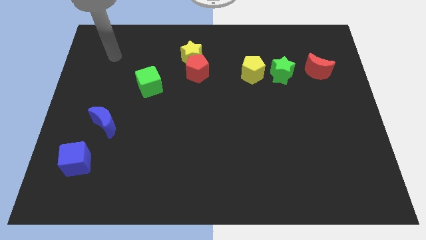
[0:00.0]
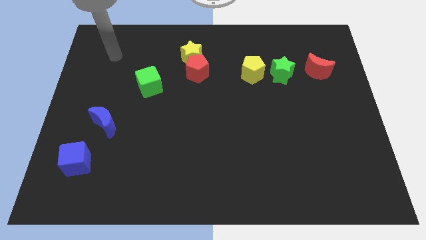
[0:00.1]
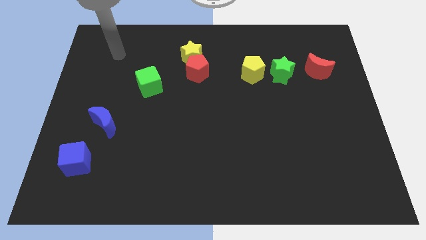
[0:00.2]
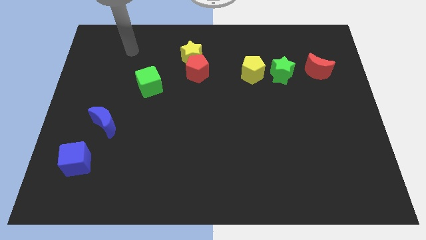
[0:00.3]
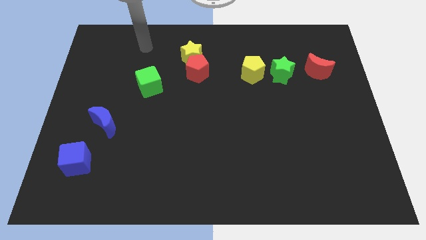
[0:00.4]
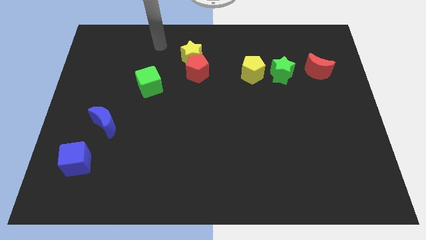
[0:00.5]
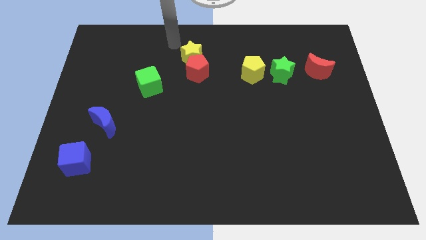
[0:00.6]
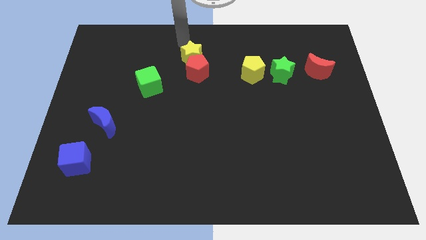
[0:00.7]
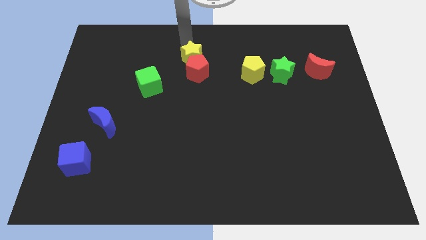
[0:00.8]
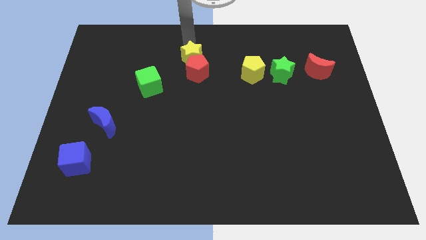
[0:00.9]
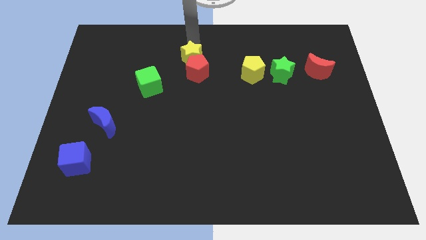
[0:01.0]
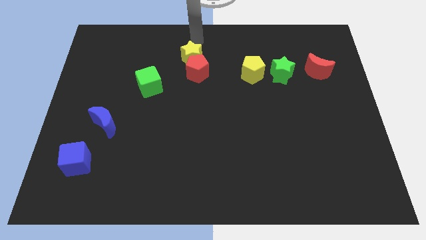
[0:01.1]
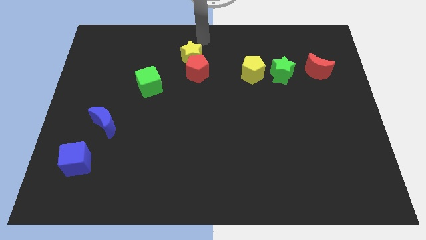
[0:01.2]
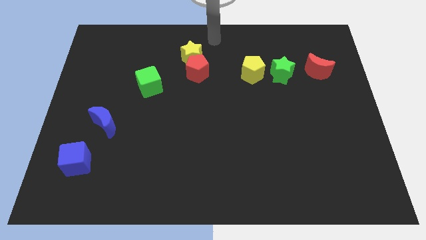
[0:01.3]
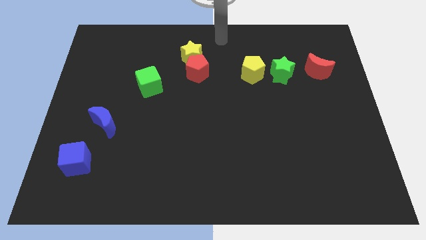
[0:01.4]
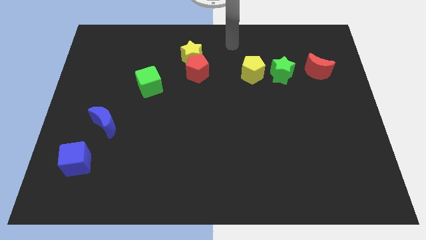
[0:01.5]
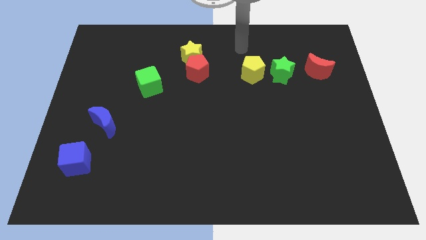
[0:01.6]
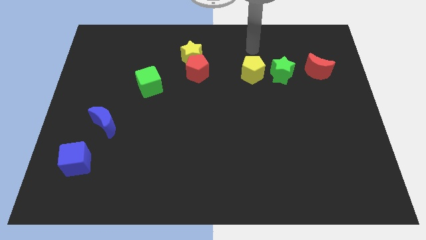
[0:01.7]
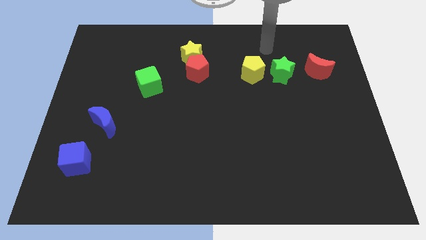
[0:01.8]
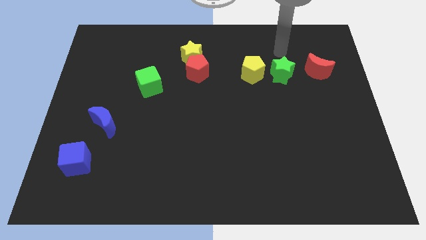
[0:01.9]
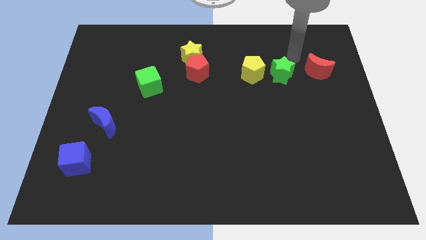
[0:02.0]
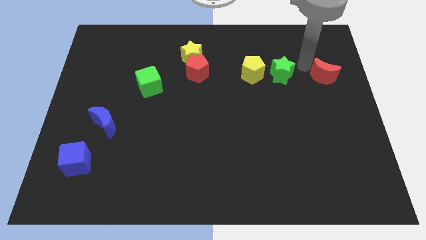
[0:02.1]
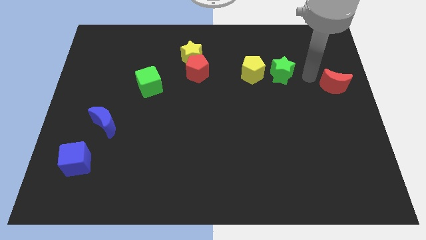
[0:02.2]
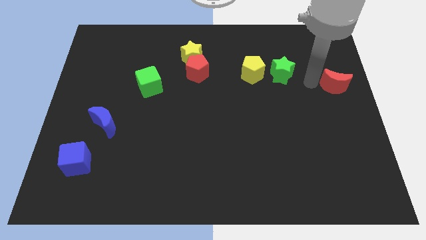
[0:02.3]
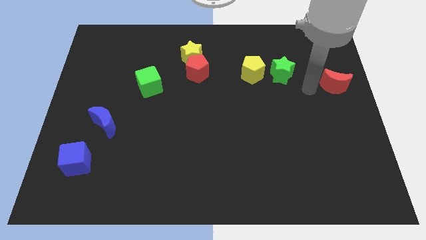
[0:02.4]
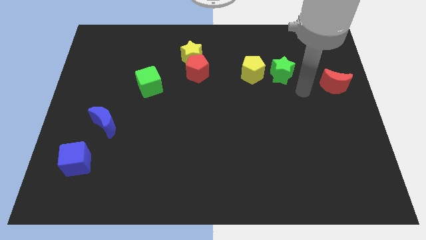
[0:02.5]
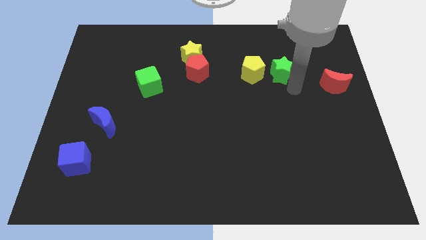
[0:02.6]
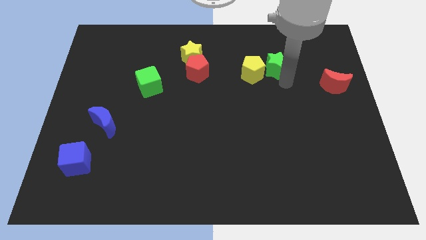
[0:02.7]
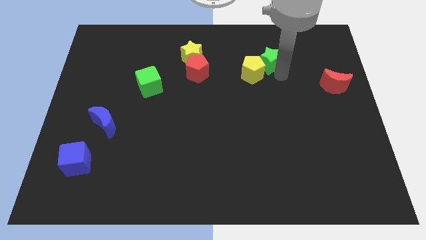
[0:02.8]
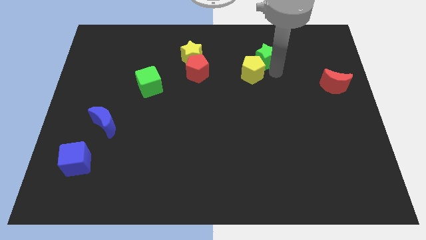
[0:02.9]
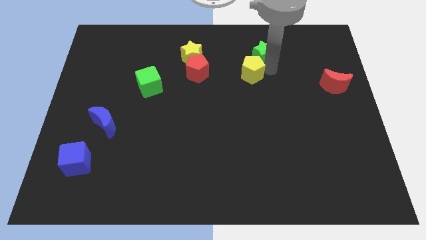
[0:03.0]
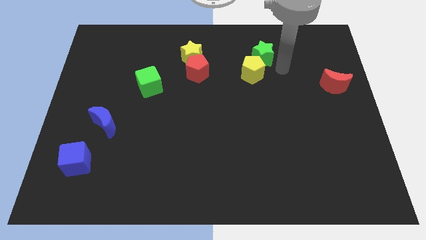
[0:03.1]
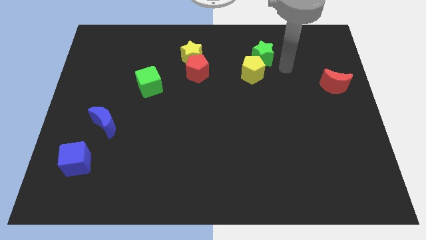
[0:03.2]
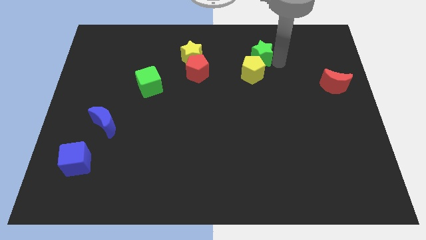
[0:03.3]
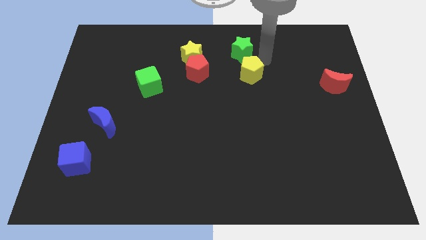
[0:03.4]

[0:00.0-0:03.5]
push the green star above the yellow pentagon

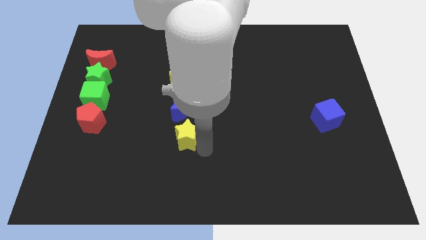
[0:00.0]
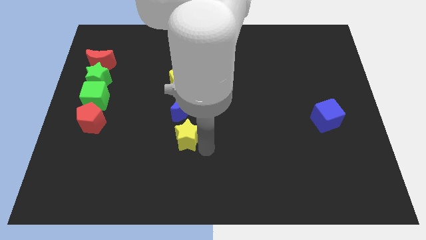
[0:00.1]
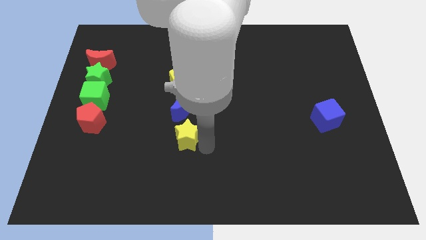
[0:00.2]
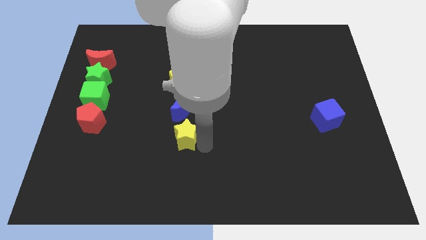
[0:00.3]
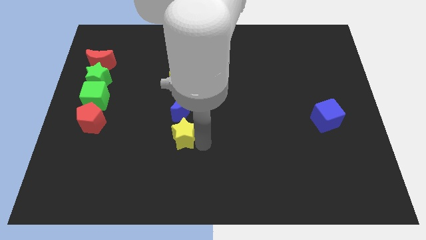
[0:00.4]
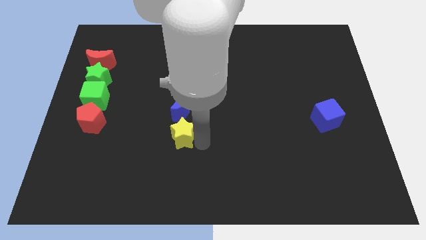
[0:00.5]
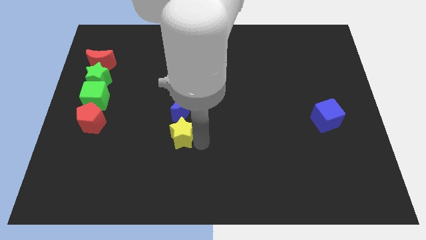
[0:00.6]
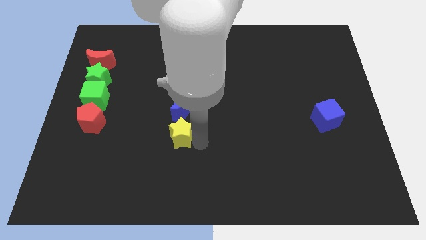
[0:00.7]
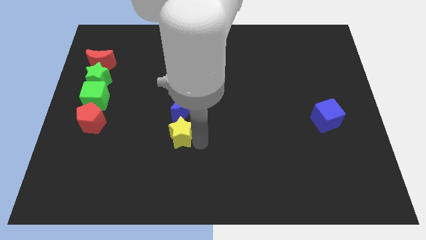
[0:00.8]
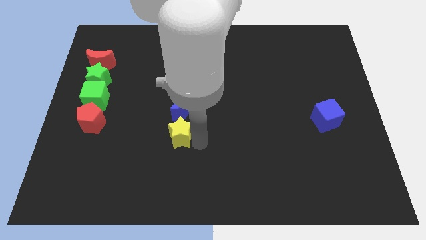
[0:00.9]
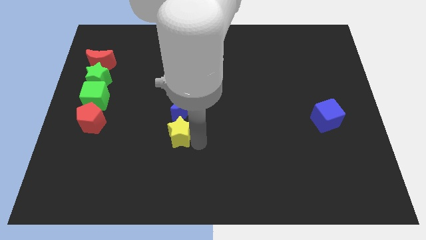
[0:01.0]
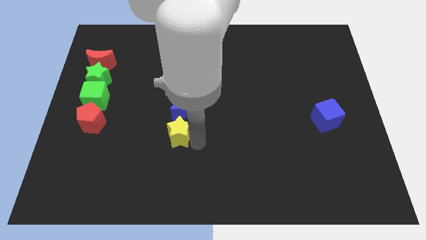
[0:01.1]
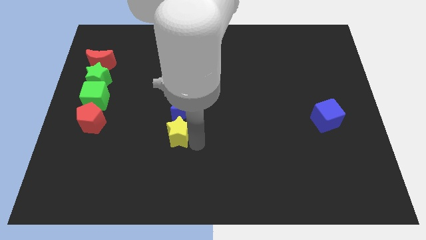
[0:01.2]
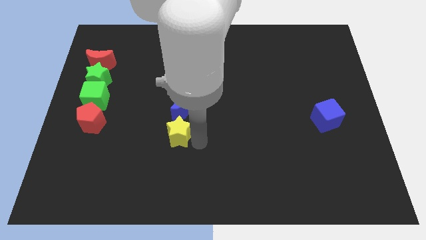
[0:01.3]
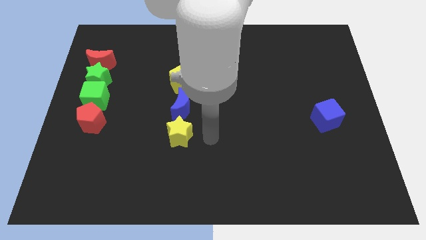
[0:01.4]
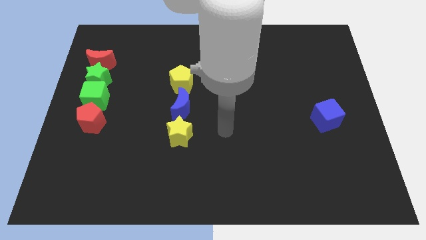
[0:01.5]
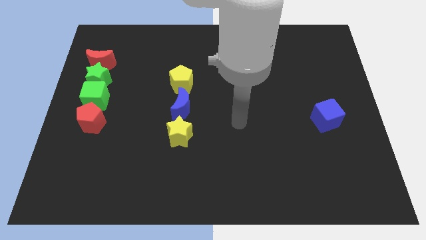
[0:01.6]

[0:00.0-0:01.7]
place the yellow star below the blue crescent

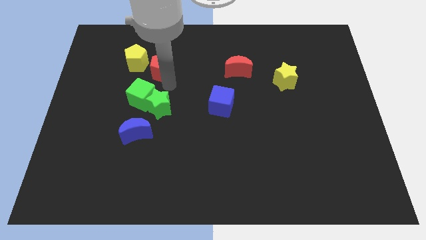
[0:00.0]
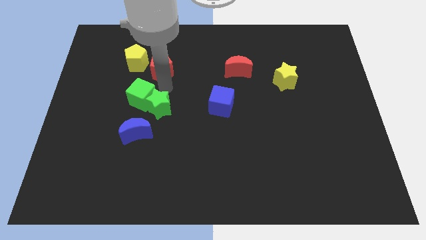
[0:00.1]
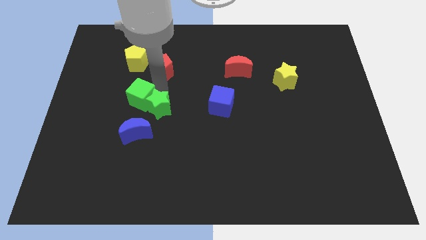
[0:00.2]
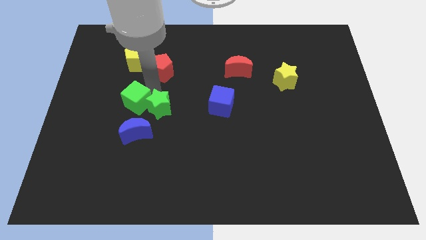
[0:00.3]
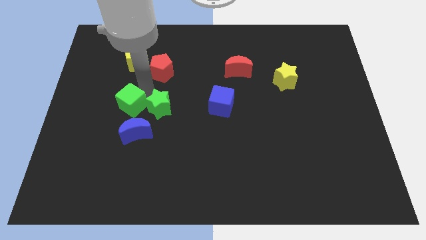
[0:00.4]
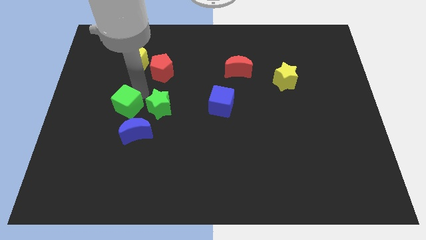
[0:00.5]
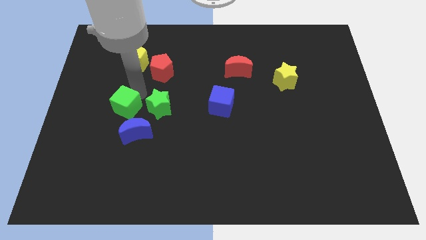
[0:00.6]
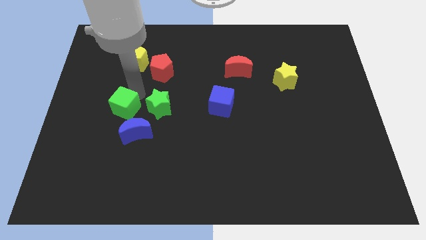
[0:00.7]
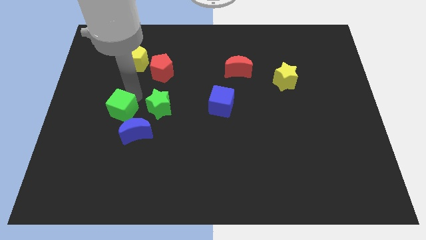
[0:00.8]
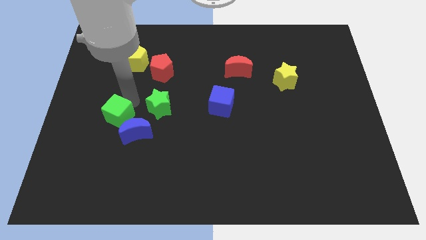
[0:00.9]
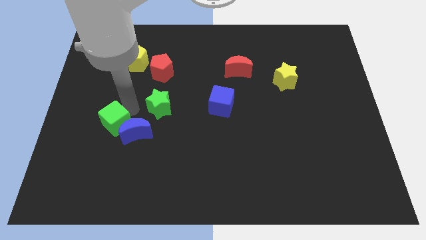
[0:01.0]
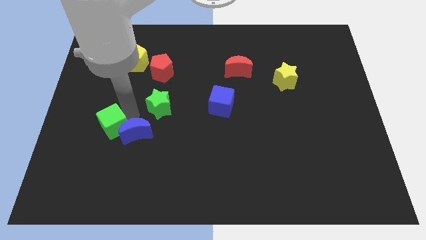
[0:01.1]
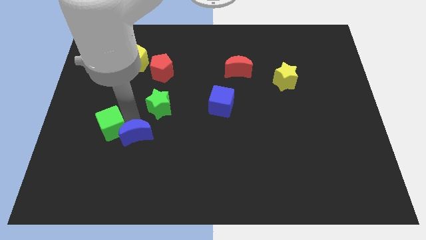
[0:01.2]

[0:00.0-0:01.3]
push the green cube to top left of the blue moon

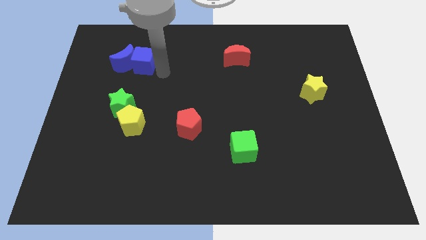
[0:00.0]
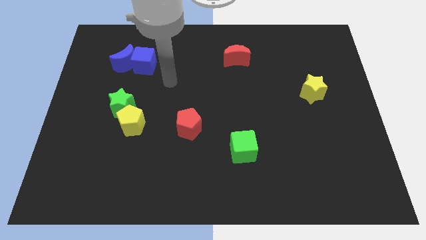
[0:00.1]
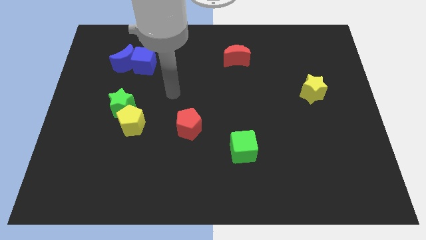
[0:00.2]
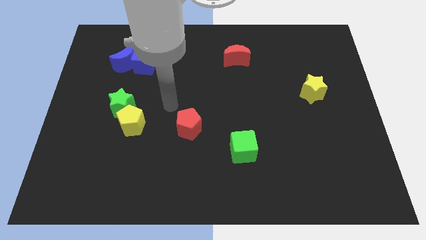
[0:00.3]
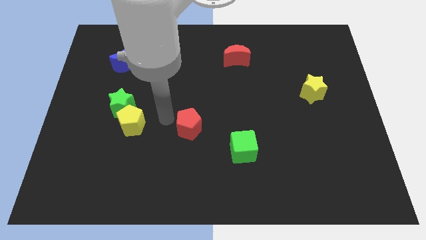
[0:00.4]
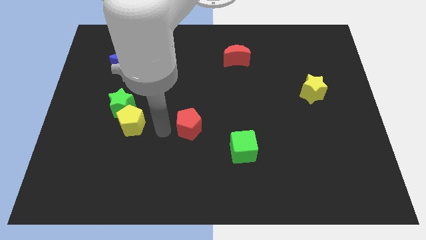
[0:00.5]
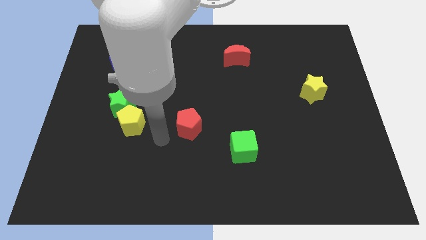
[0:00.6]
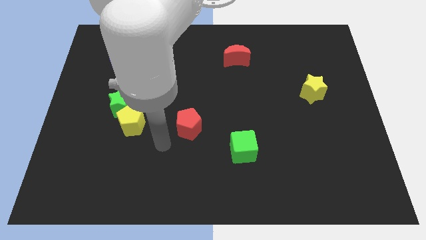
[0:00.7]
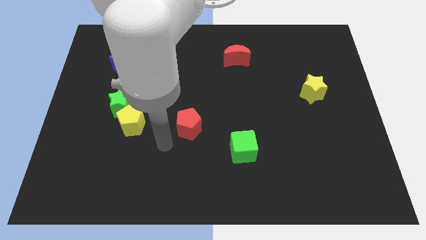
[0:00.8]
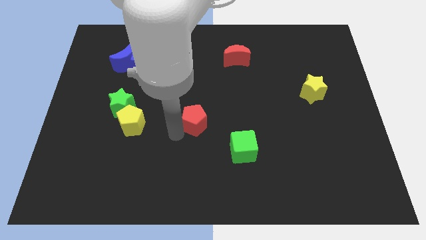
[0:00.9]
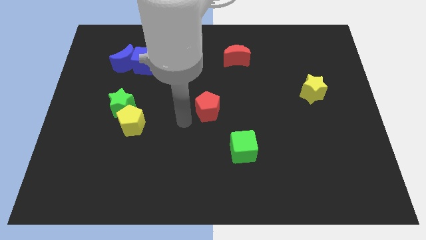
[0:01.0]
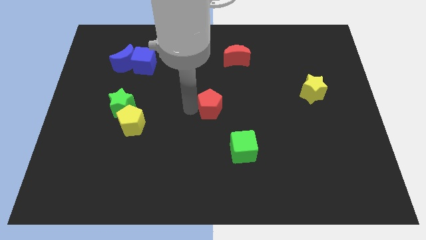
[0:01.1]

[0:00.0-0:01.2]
push the red pentagon to the right of the green star

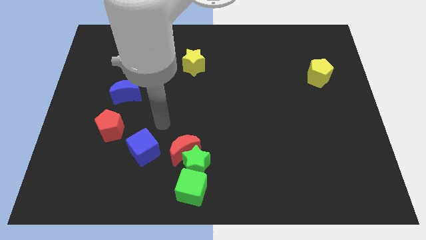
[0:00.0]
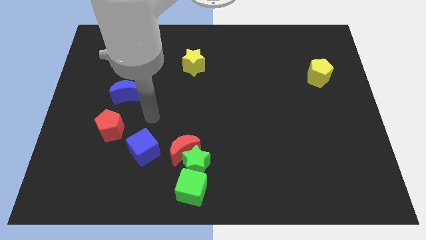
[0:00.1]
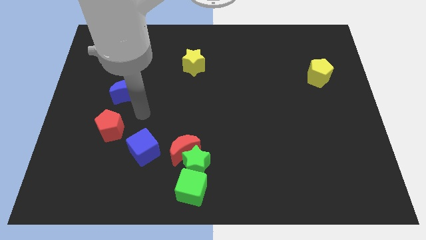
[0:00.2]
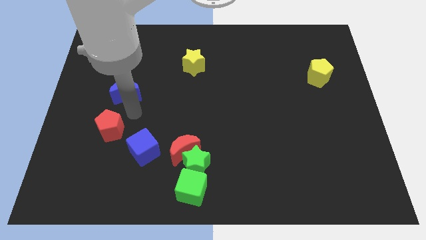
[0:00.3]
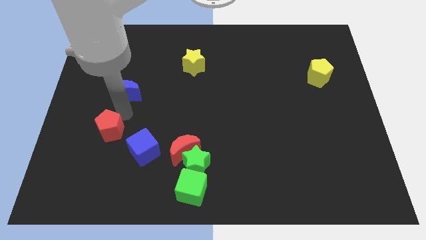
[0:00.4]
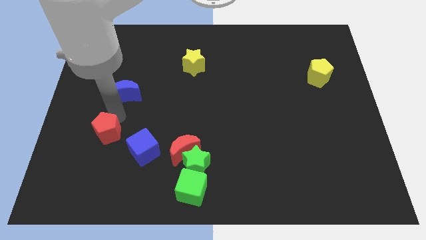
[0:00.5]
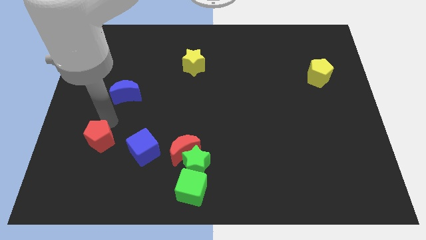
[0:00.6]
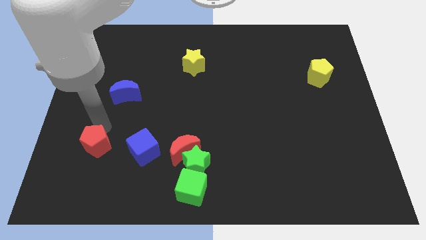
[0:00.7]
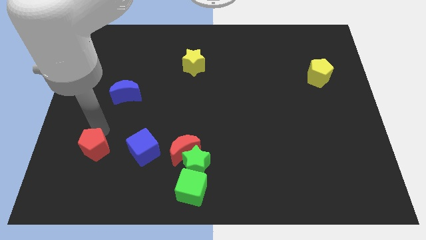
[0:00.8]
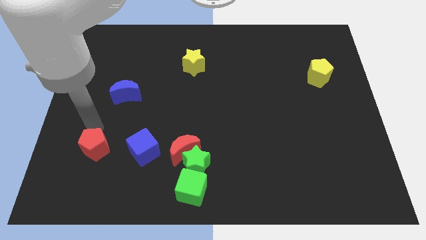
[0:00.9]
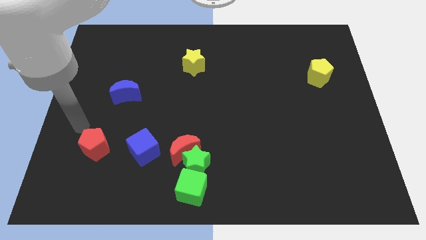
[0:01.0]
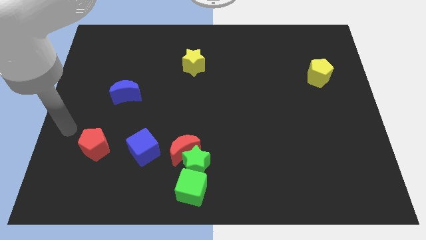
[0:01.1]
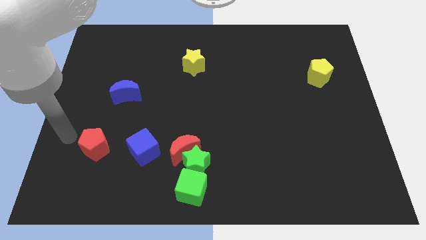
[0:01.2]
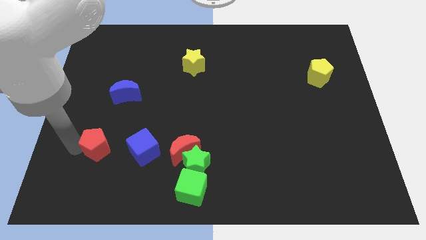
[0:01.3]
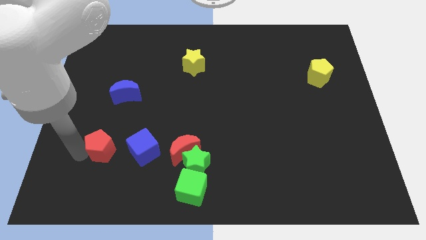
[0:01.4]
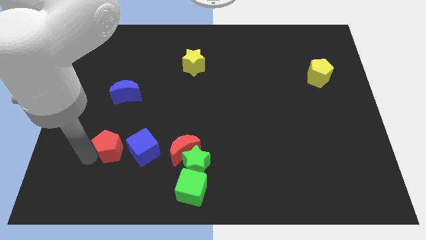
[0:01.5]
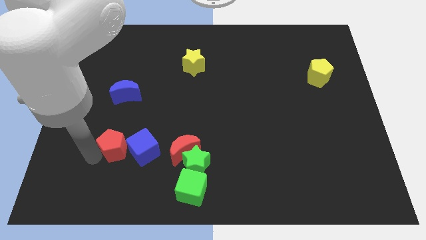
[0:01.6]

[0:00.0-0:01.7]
place red pentagon to the left of the blue cube
